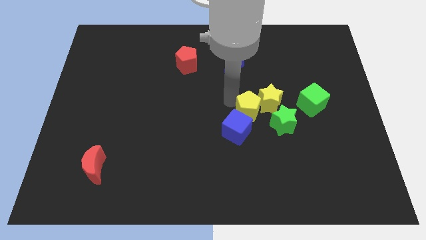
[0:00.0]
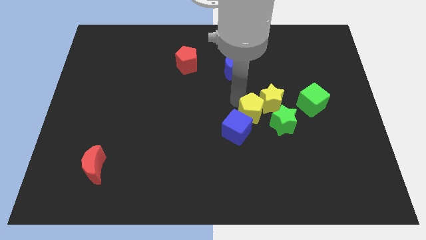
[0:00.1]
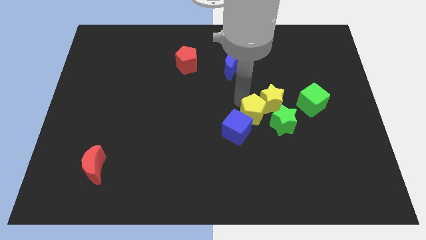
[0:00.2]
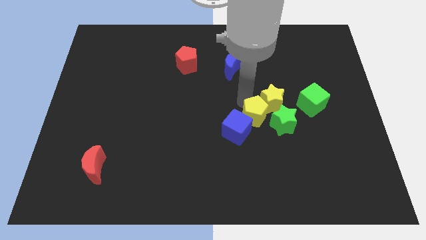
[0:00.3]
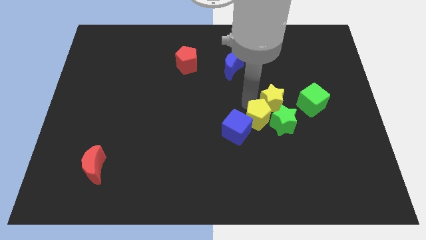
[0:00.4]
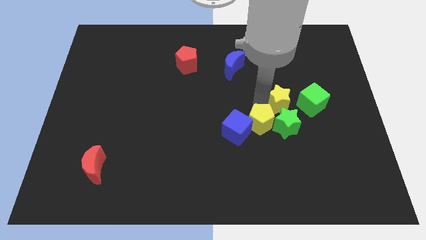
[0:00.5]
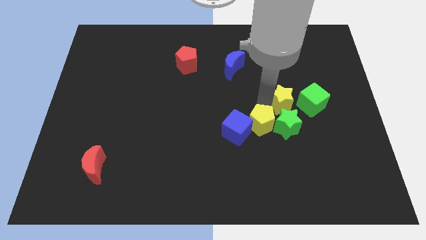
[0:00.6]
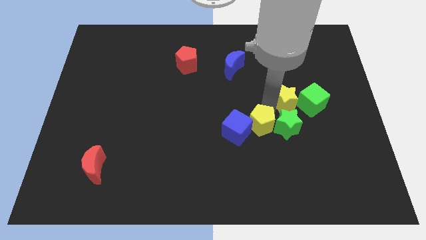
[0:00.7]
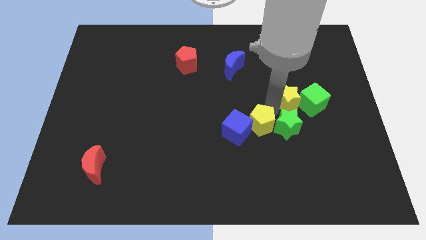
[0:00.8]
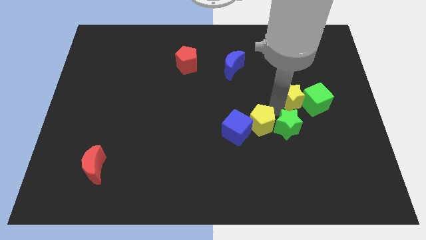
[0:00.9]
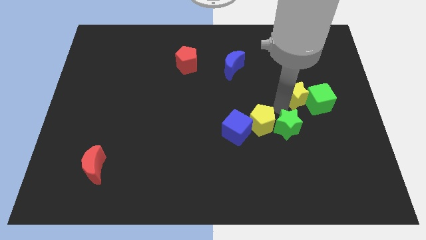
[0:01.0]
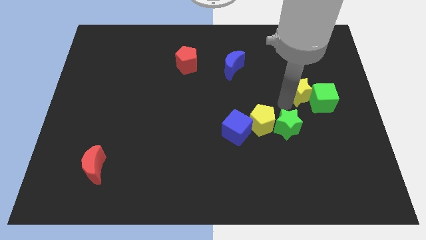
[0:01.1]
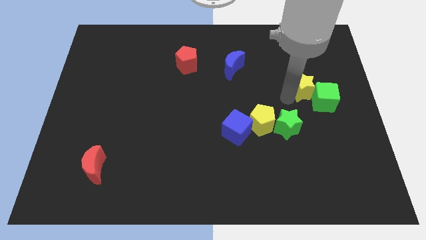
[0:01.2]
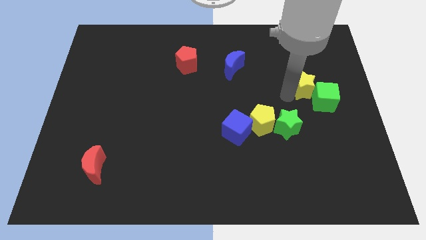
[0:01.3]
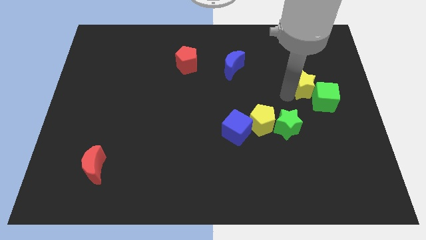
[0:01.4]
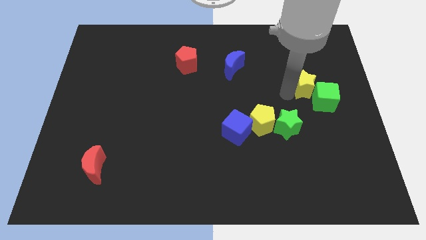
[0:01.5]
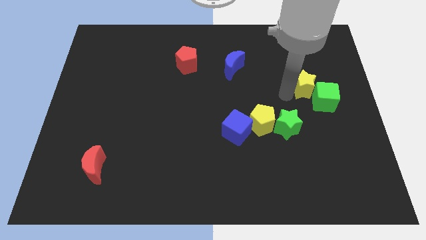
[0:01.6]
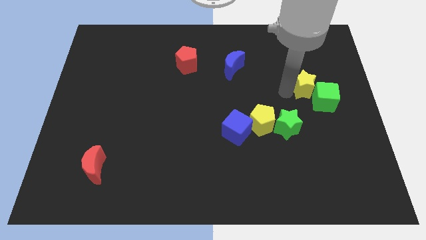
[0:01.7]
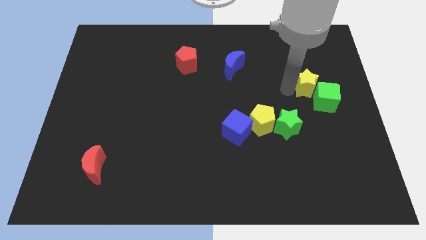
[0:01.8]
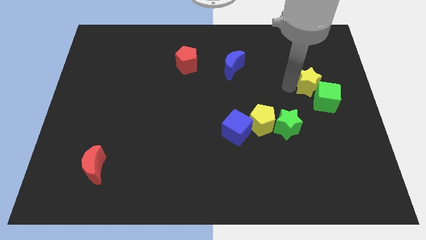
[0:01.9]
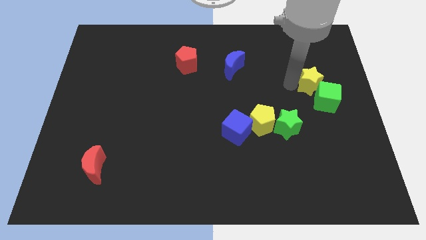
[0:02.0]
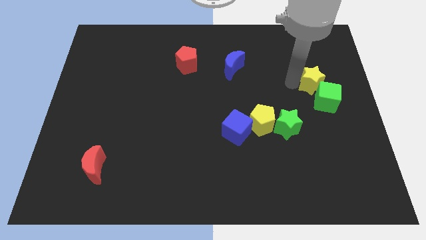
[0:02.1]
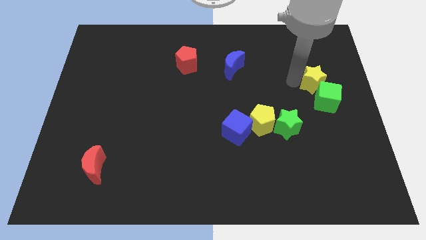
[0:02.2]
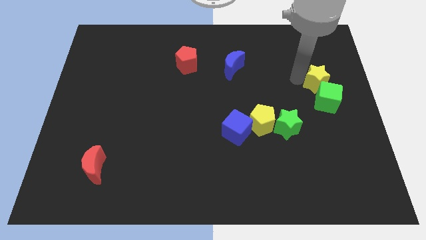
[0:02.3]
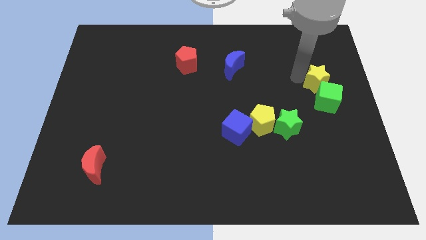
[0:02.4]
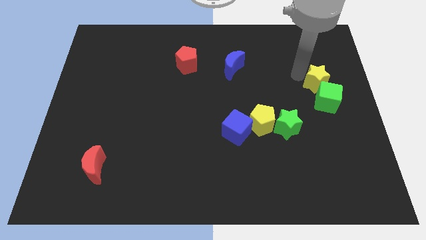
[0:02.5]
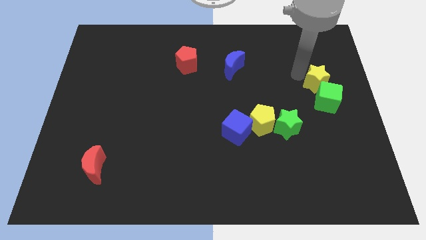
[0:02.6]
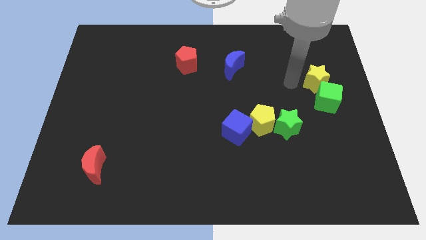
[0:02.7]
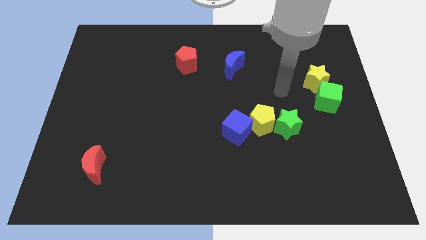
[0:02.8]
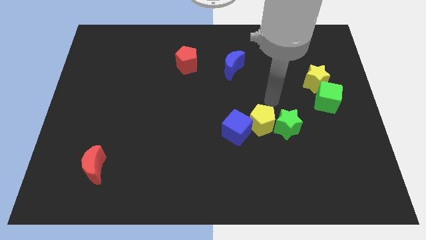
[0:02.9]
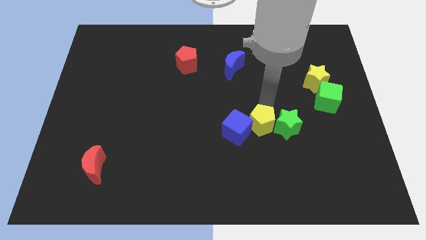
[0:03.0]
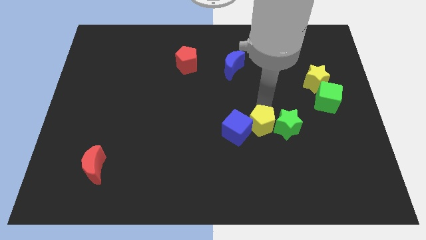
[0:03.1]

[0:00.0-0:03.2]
push the yellow star along with green cube towards top right

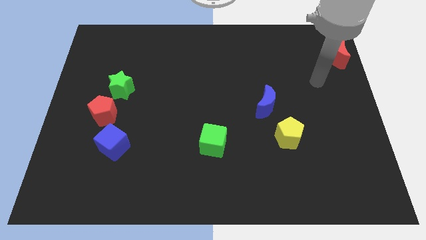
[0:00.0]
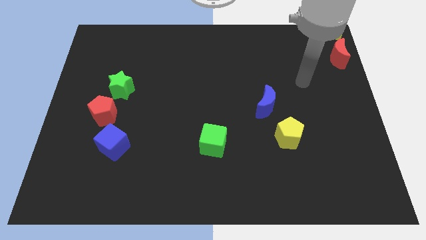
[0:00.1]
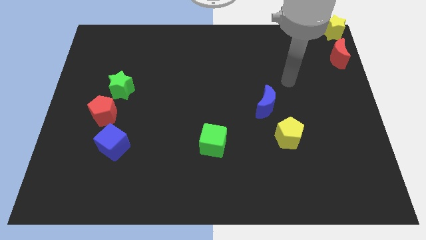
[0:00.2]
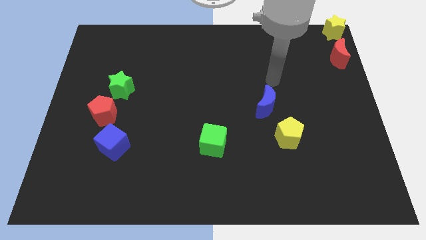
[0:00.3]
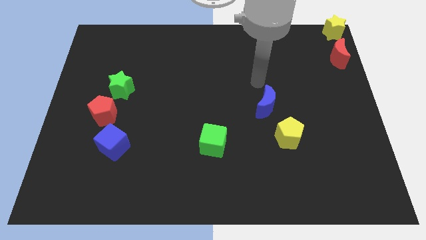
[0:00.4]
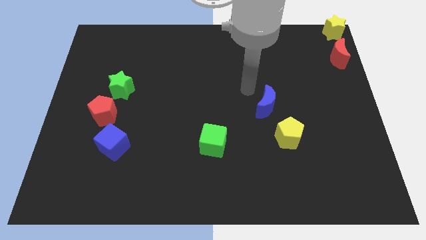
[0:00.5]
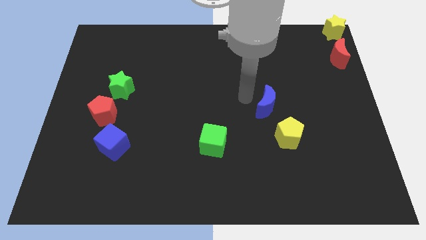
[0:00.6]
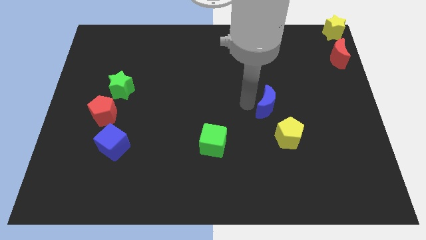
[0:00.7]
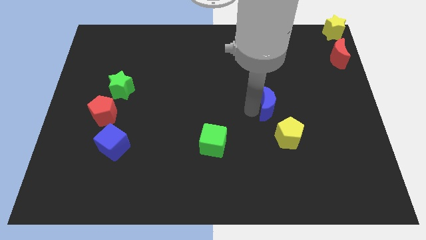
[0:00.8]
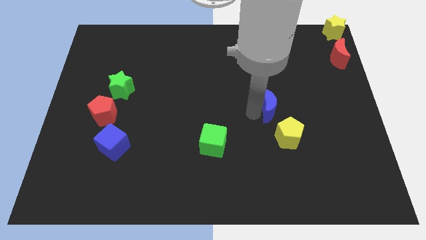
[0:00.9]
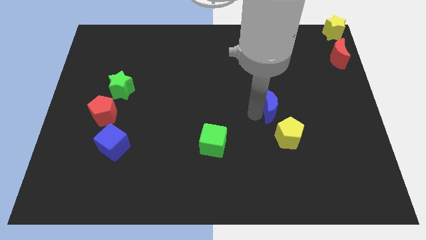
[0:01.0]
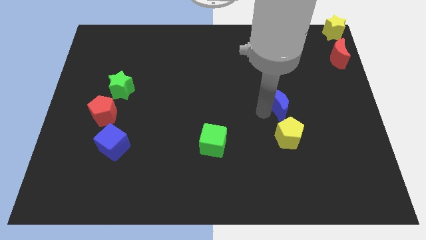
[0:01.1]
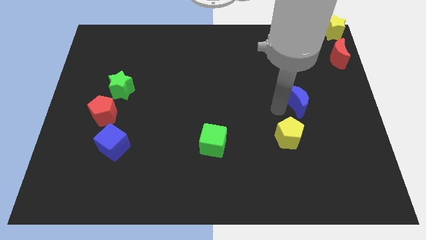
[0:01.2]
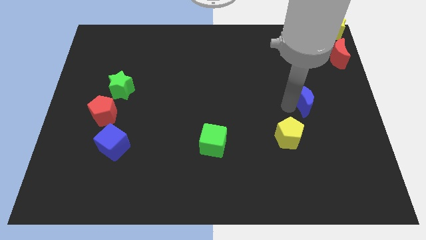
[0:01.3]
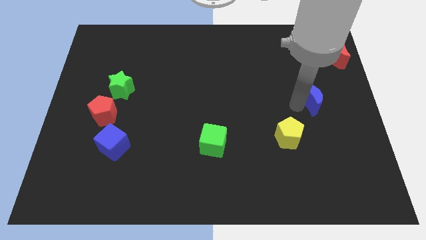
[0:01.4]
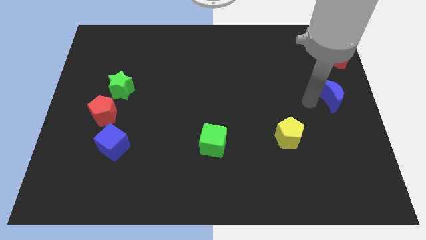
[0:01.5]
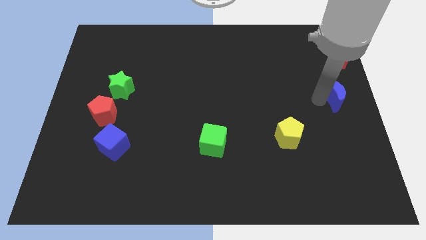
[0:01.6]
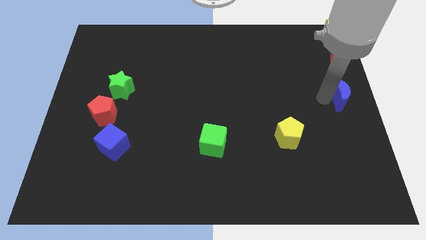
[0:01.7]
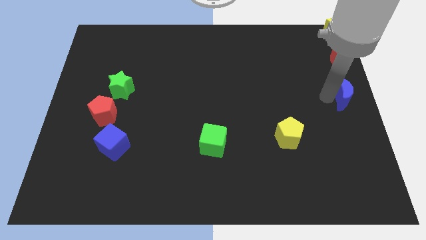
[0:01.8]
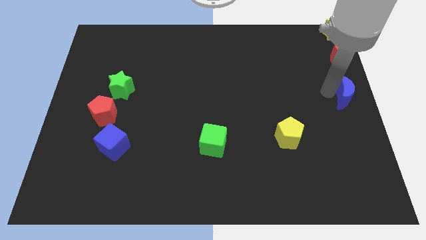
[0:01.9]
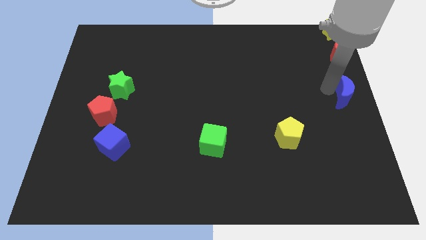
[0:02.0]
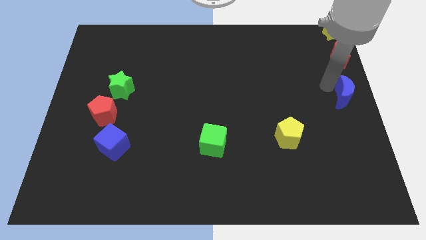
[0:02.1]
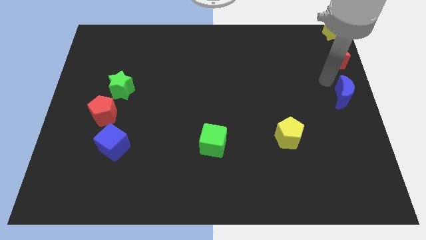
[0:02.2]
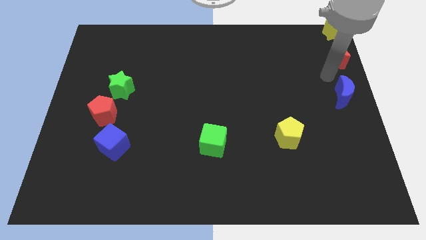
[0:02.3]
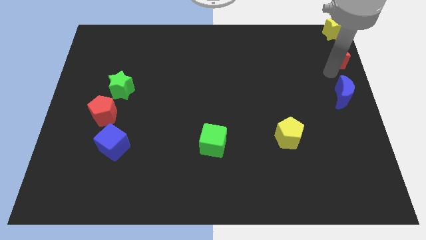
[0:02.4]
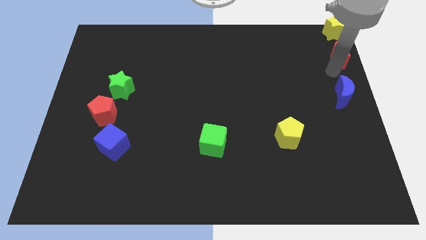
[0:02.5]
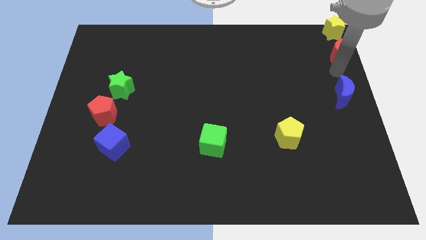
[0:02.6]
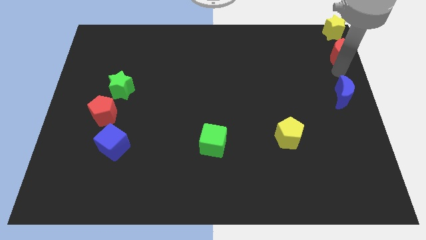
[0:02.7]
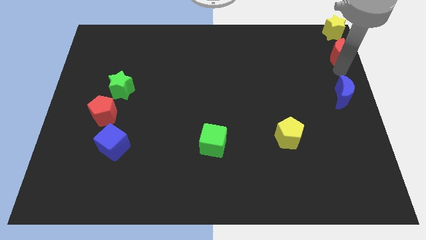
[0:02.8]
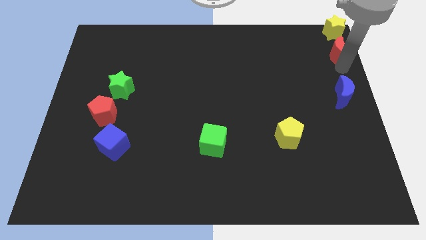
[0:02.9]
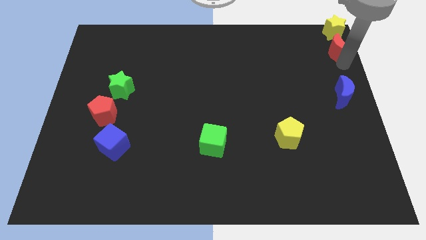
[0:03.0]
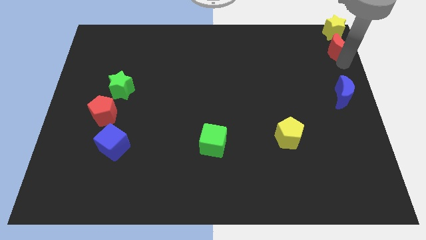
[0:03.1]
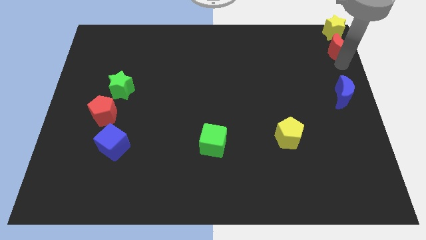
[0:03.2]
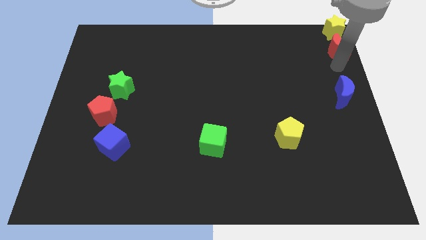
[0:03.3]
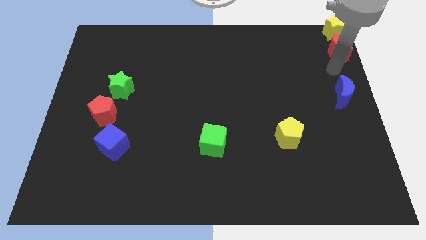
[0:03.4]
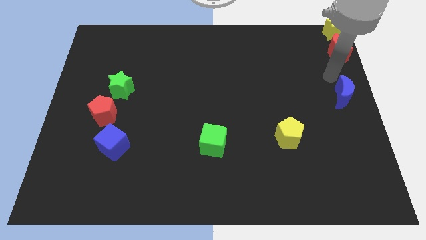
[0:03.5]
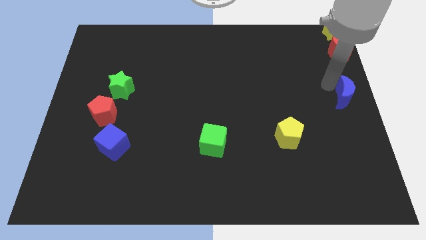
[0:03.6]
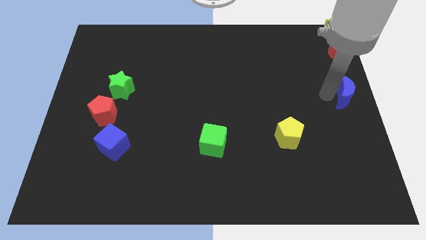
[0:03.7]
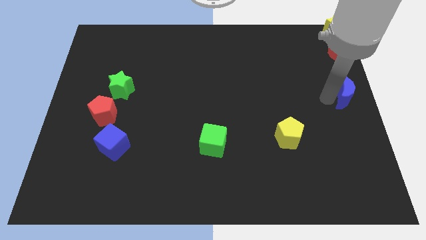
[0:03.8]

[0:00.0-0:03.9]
place the blue moon below the red moon

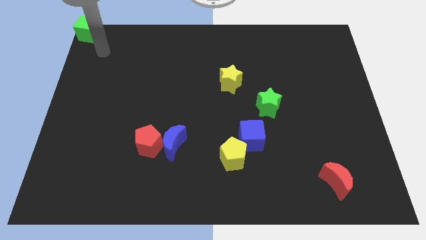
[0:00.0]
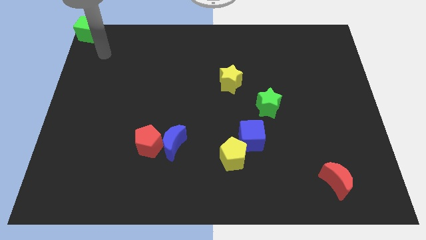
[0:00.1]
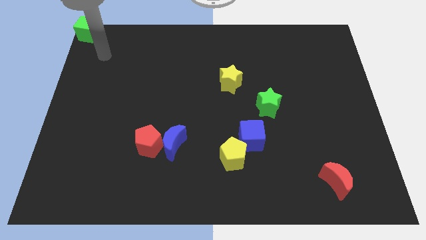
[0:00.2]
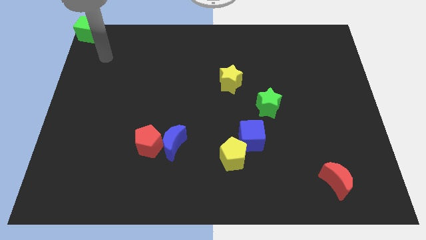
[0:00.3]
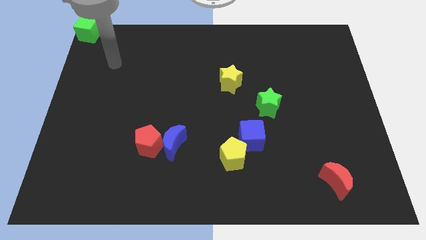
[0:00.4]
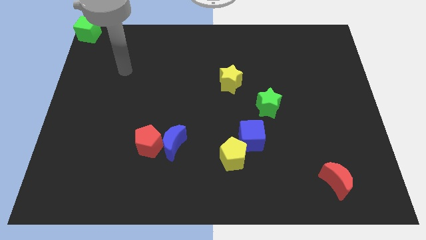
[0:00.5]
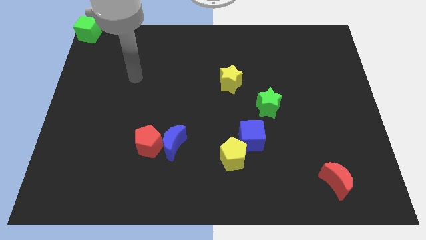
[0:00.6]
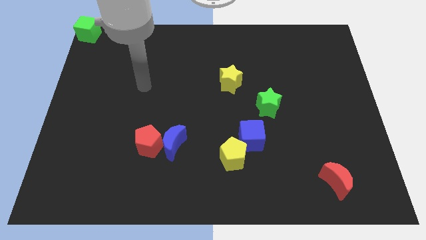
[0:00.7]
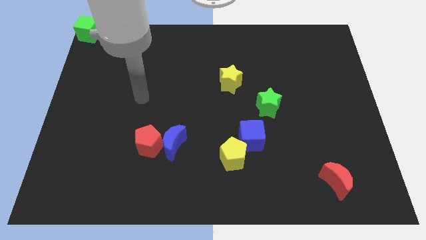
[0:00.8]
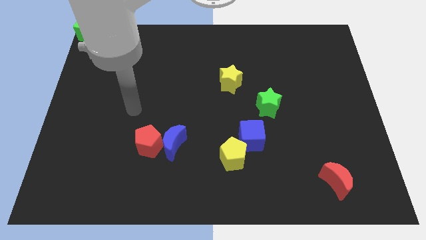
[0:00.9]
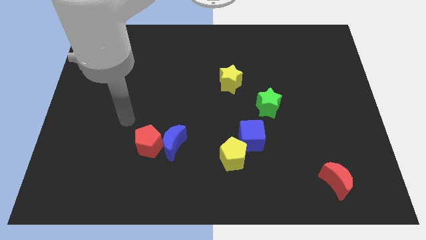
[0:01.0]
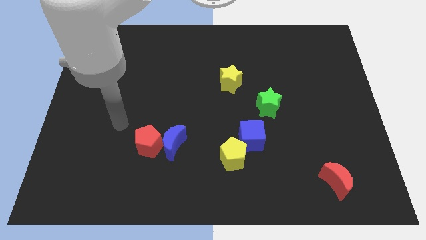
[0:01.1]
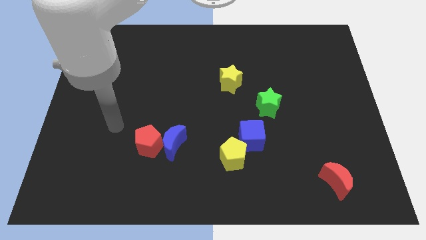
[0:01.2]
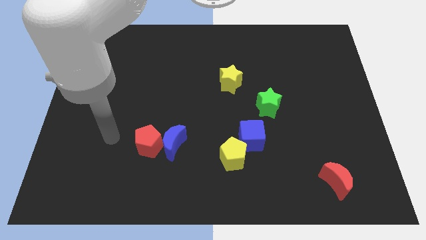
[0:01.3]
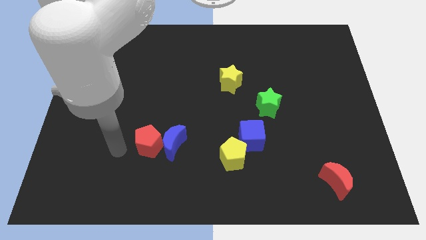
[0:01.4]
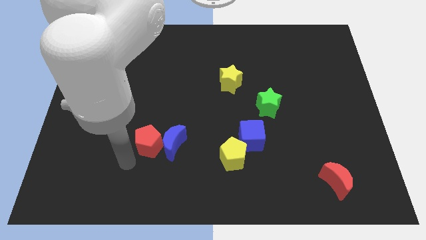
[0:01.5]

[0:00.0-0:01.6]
move yourself away from the green cube

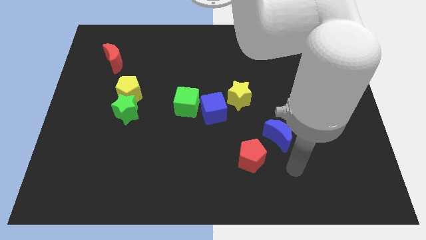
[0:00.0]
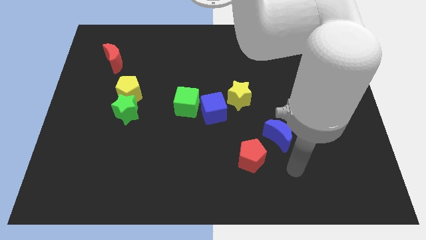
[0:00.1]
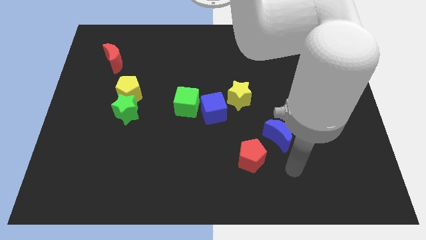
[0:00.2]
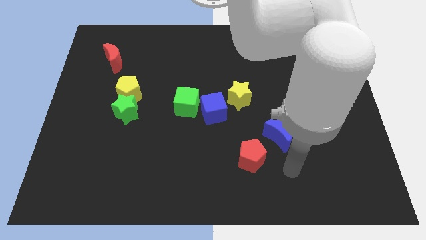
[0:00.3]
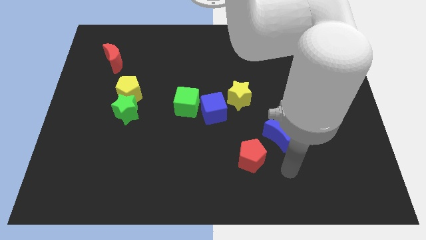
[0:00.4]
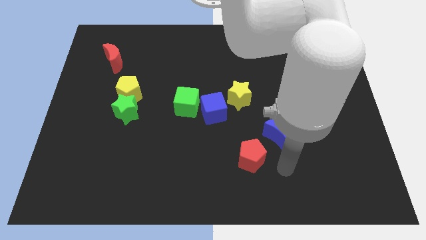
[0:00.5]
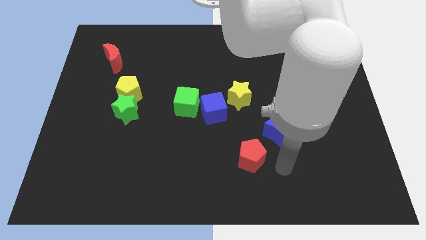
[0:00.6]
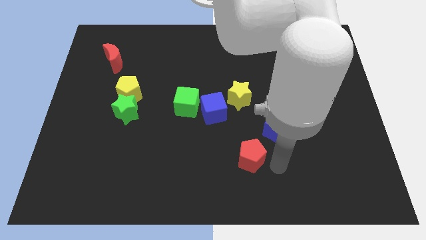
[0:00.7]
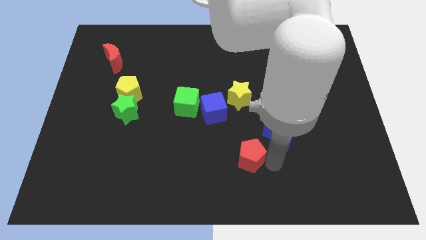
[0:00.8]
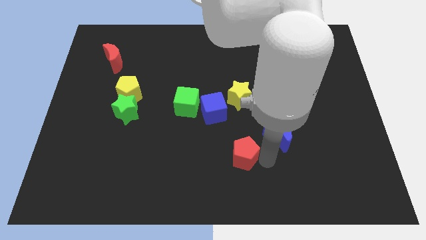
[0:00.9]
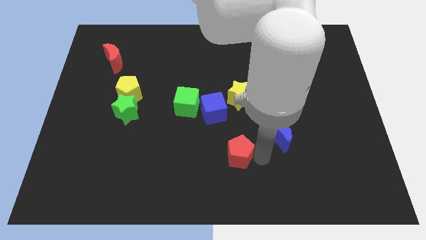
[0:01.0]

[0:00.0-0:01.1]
separate red pentagon from blue crescent
